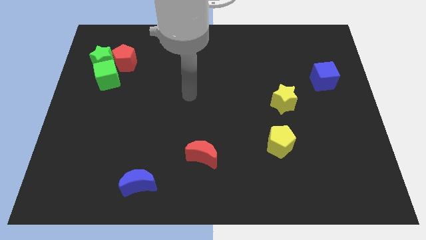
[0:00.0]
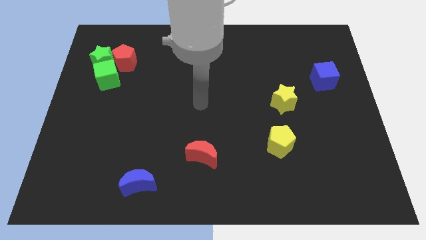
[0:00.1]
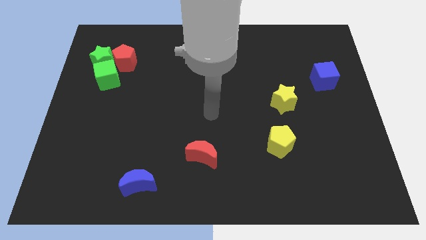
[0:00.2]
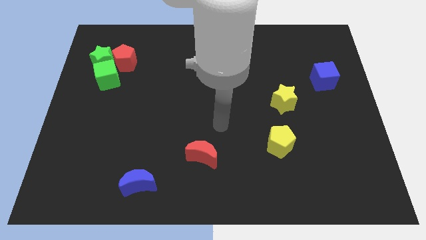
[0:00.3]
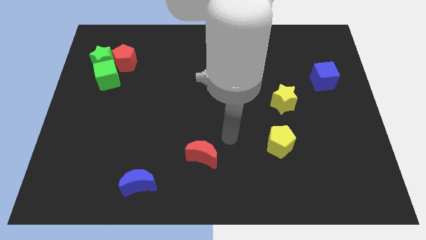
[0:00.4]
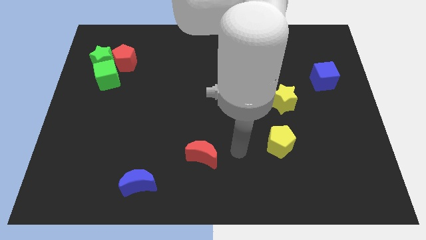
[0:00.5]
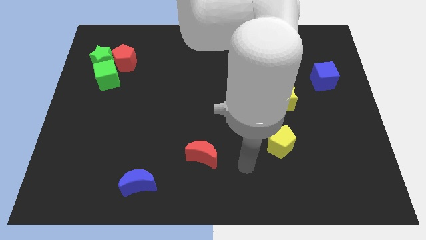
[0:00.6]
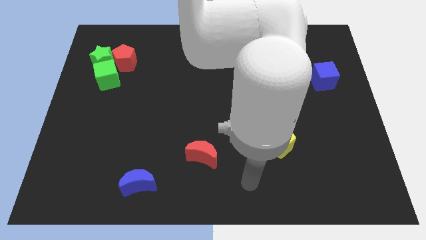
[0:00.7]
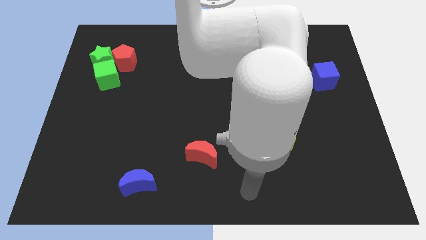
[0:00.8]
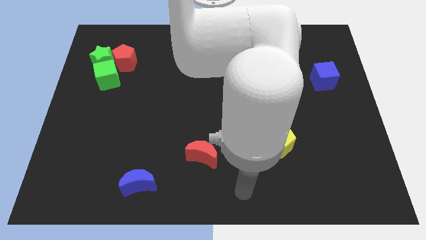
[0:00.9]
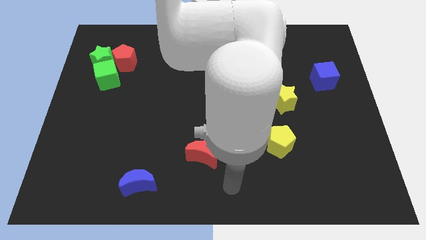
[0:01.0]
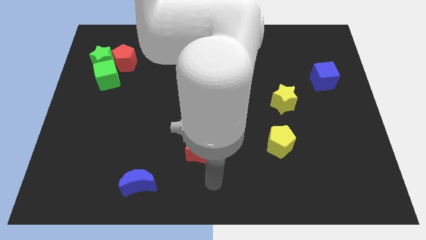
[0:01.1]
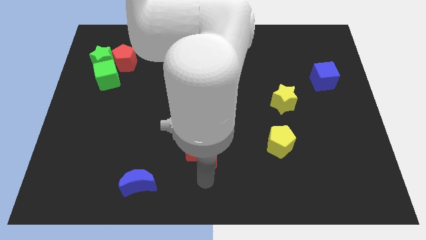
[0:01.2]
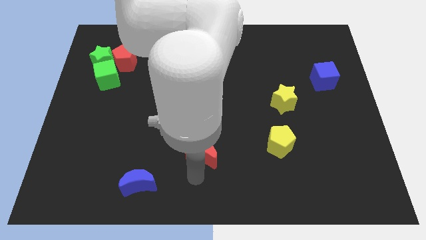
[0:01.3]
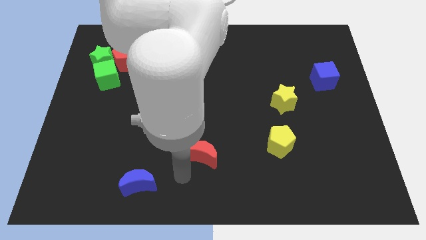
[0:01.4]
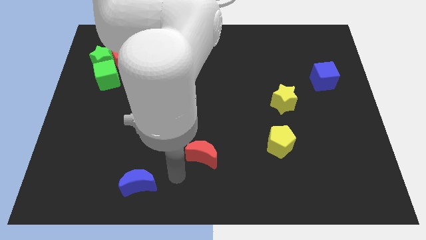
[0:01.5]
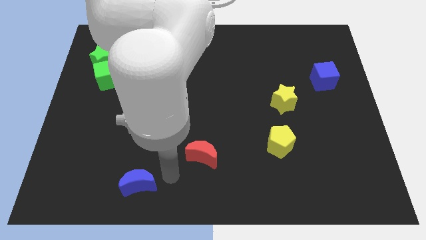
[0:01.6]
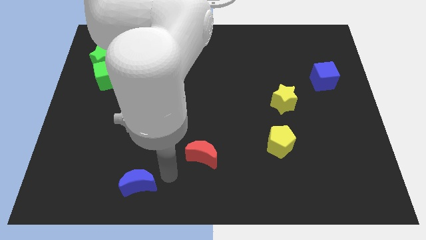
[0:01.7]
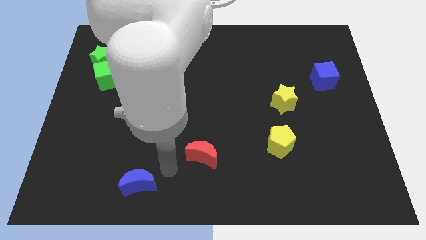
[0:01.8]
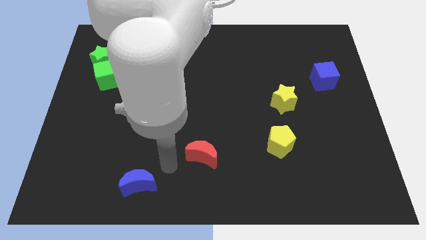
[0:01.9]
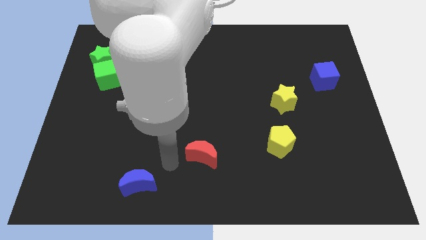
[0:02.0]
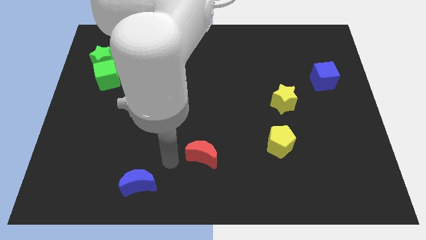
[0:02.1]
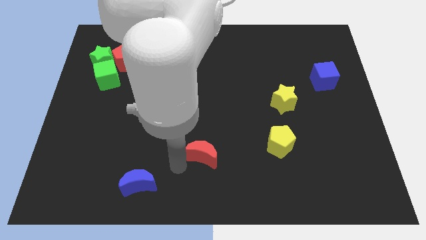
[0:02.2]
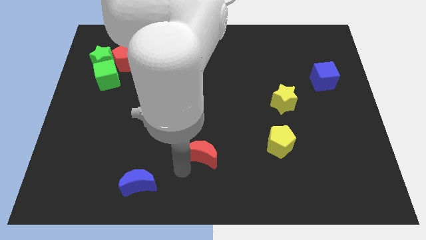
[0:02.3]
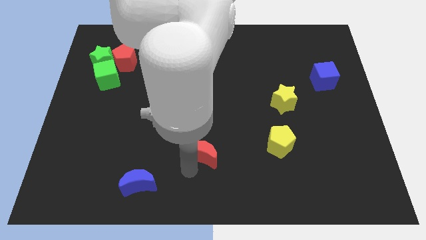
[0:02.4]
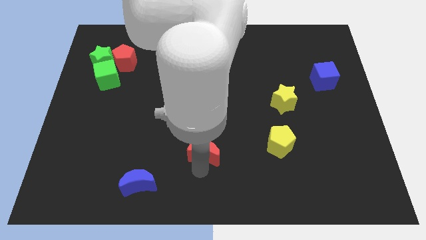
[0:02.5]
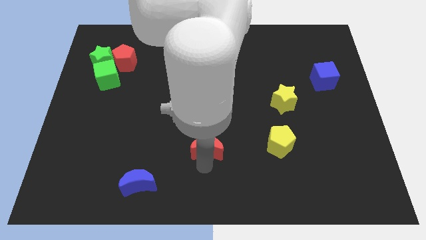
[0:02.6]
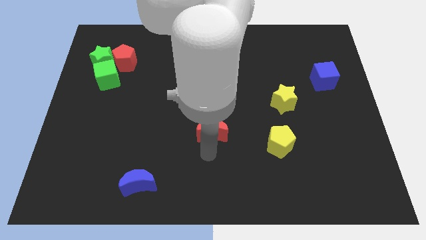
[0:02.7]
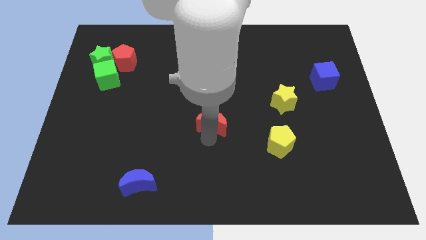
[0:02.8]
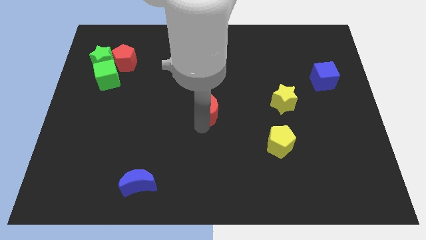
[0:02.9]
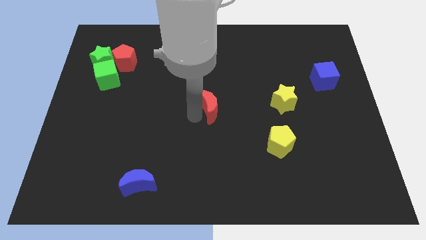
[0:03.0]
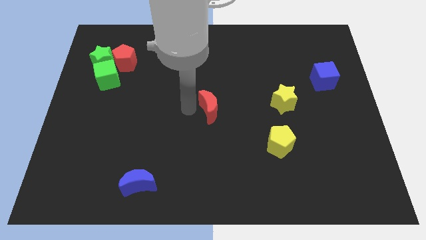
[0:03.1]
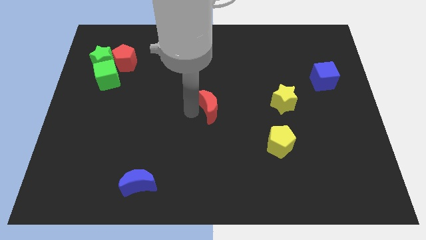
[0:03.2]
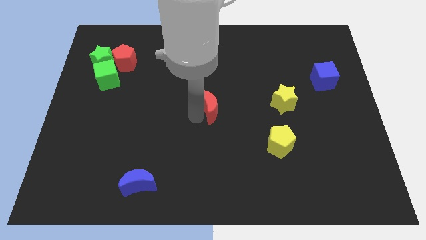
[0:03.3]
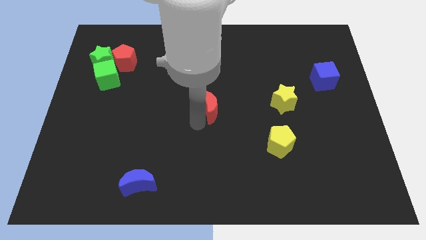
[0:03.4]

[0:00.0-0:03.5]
put the red crescent at the center of the board

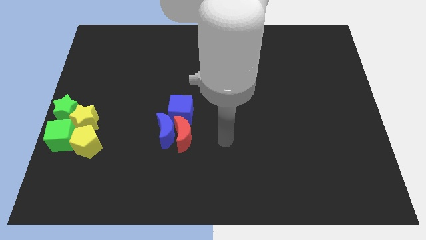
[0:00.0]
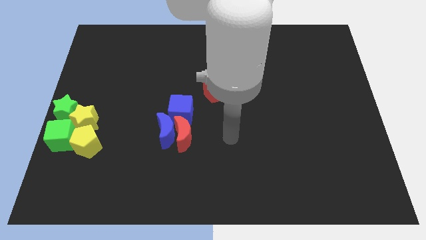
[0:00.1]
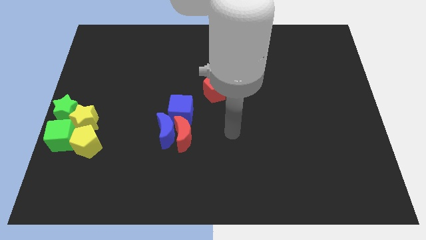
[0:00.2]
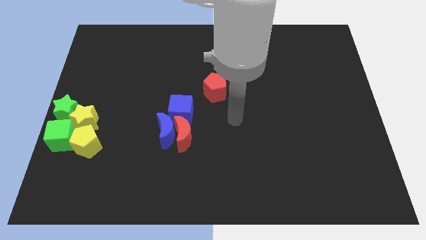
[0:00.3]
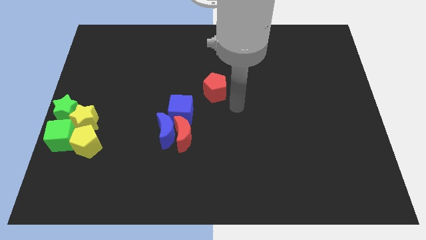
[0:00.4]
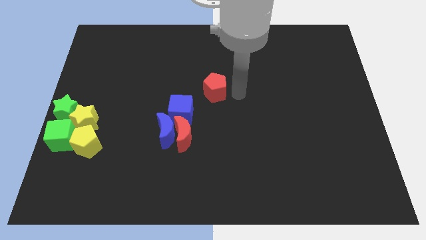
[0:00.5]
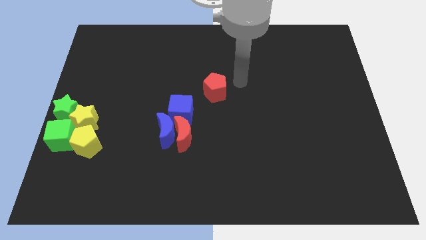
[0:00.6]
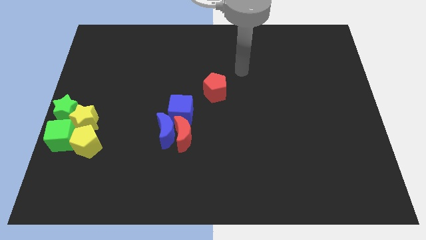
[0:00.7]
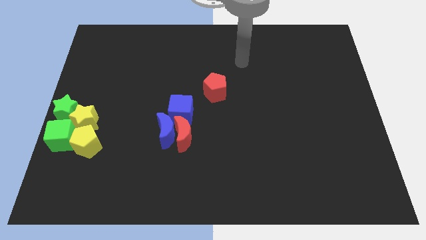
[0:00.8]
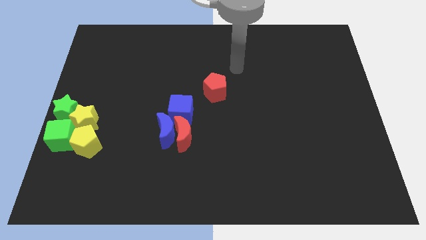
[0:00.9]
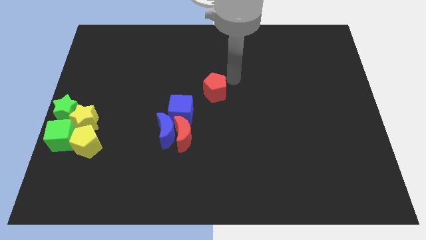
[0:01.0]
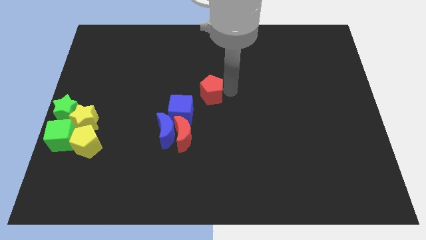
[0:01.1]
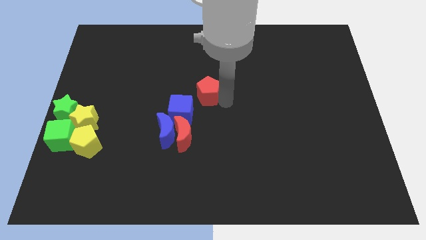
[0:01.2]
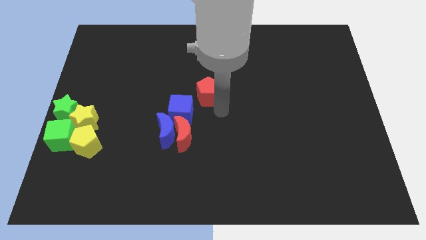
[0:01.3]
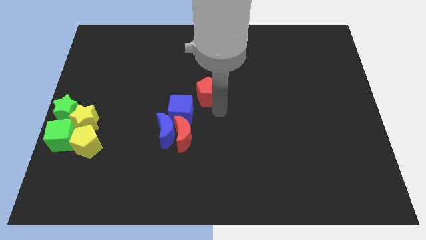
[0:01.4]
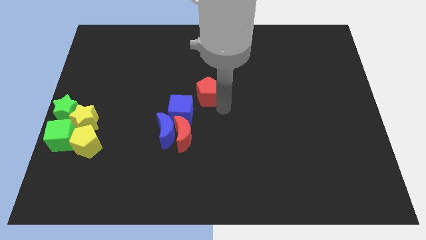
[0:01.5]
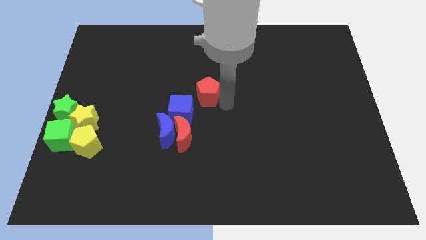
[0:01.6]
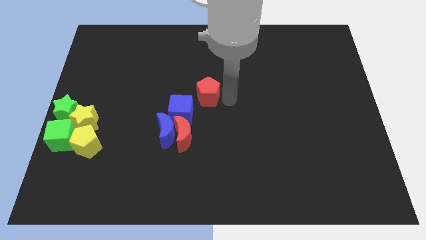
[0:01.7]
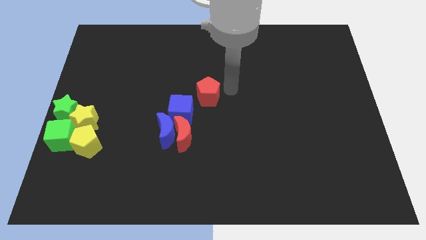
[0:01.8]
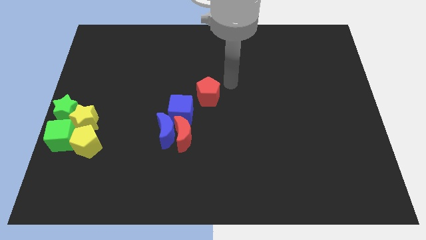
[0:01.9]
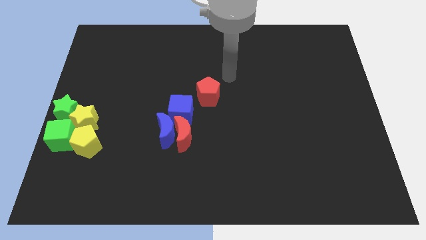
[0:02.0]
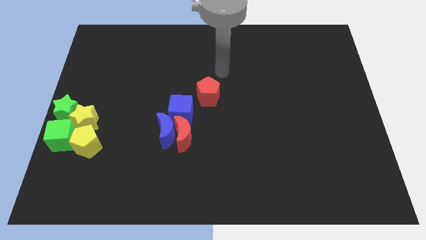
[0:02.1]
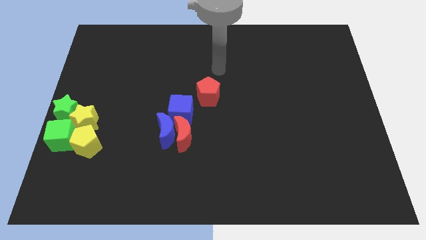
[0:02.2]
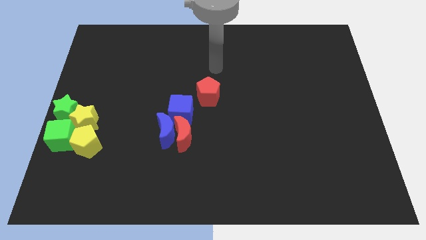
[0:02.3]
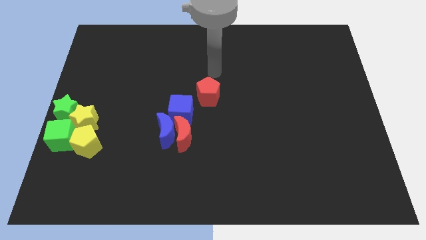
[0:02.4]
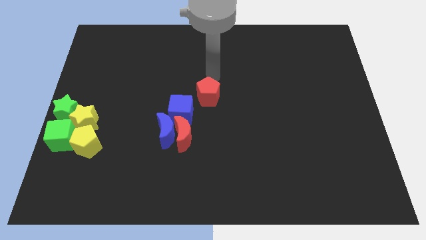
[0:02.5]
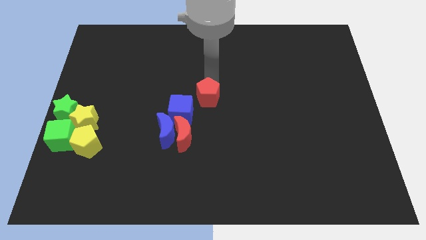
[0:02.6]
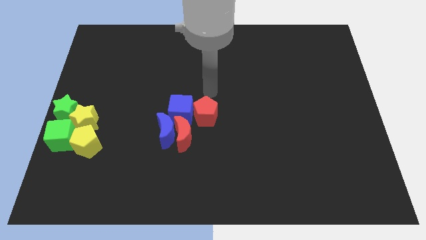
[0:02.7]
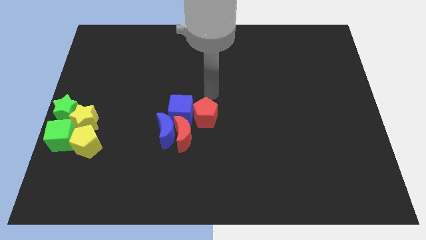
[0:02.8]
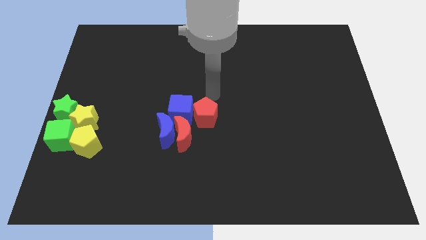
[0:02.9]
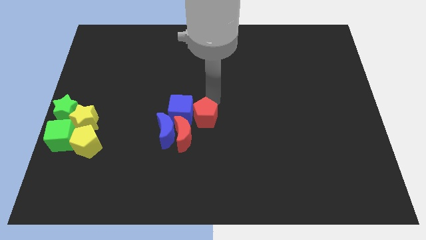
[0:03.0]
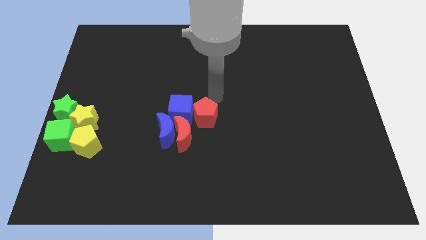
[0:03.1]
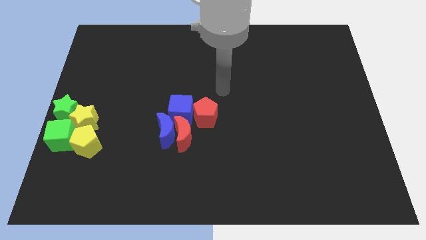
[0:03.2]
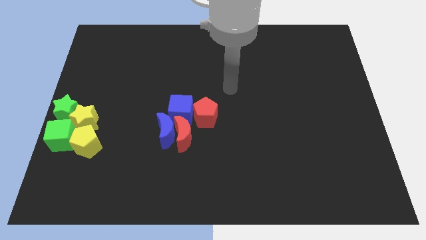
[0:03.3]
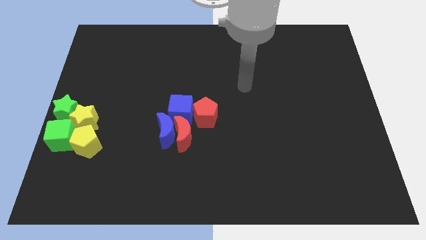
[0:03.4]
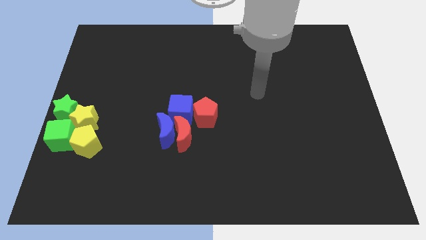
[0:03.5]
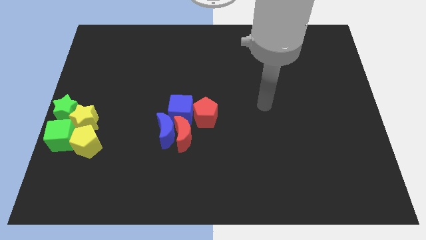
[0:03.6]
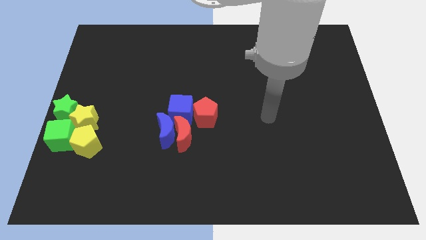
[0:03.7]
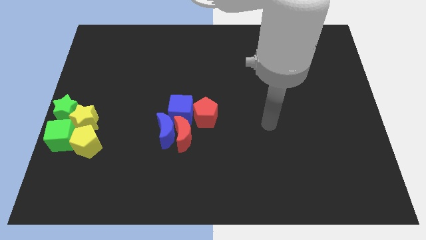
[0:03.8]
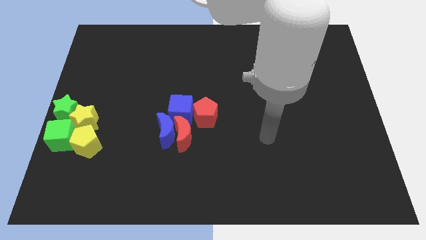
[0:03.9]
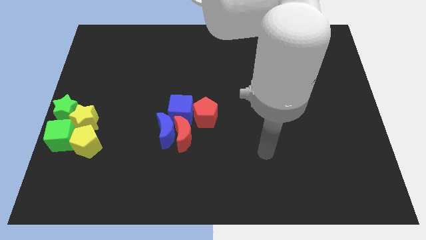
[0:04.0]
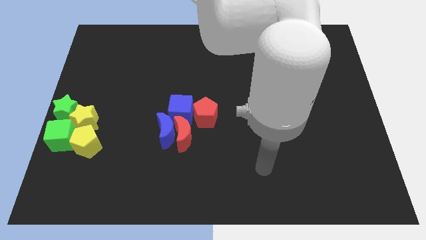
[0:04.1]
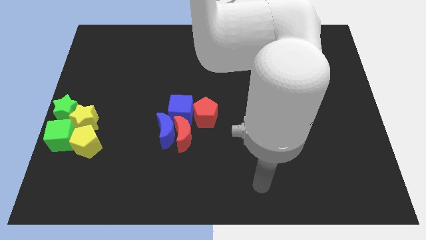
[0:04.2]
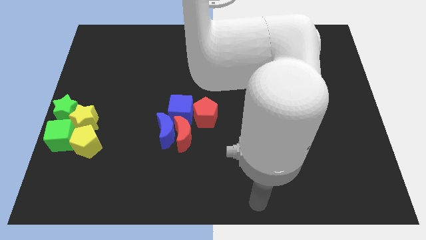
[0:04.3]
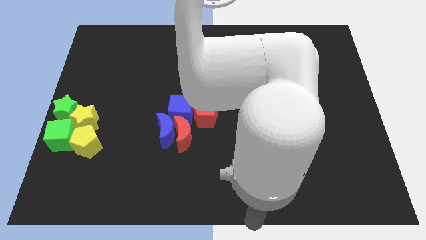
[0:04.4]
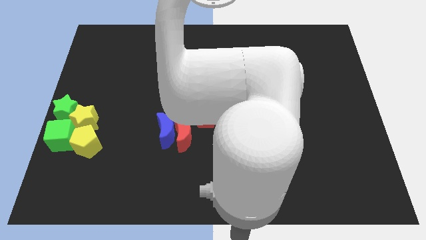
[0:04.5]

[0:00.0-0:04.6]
place the red pentagon to the right of the blue cube

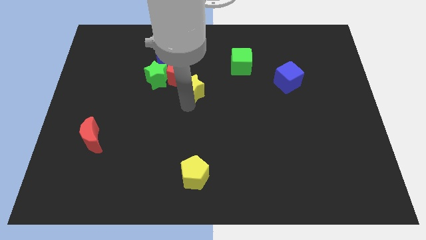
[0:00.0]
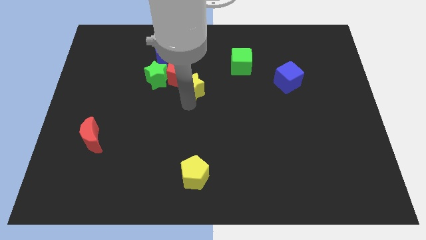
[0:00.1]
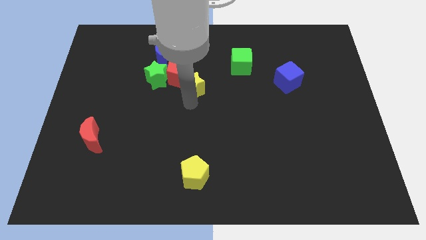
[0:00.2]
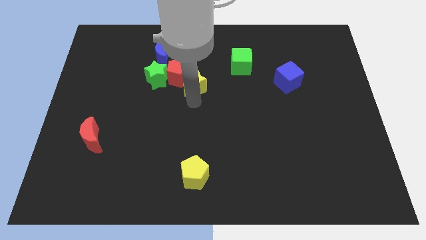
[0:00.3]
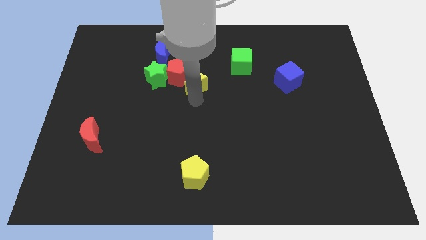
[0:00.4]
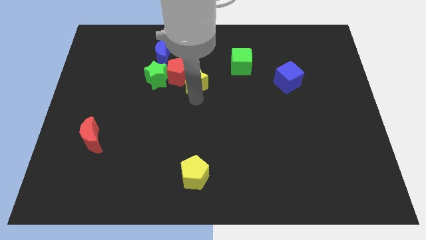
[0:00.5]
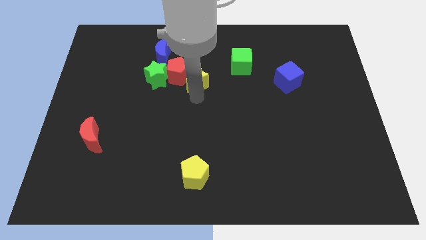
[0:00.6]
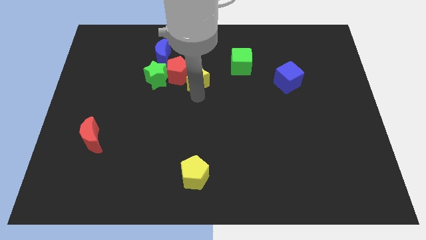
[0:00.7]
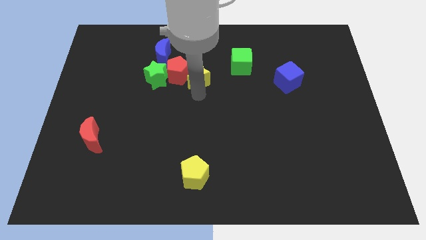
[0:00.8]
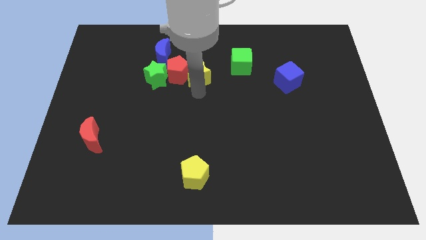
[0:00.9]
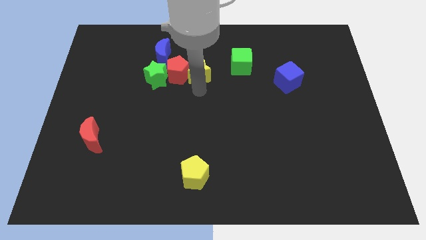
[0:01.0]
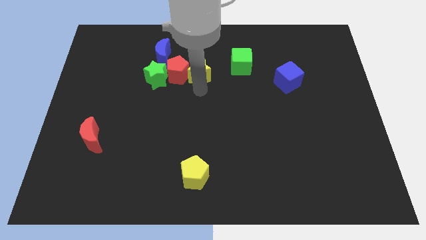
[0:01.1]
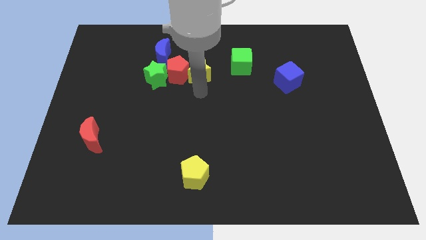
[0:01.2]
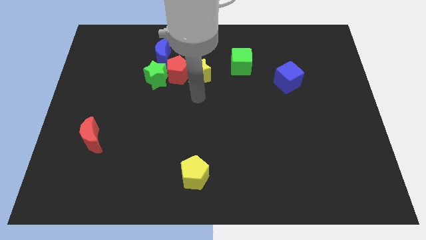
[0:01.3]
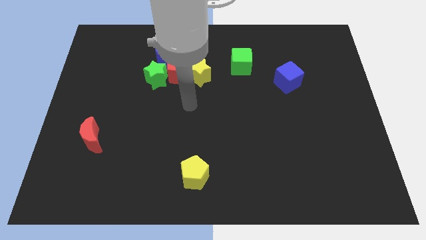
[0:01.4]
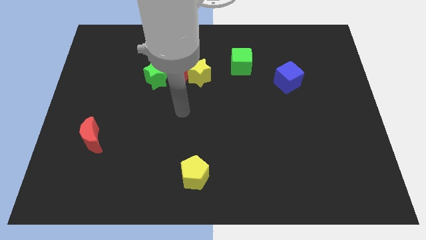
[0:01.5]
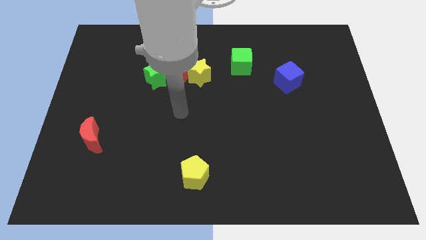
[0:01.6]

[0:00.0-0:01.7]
place yellow star to red pentagon
